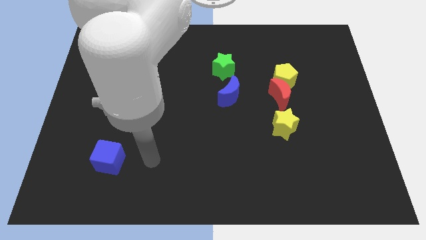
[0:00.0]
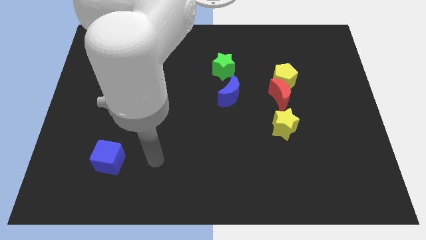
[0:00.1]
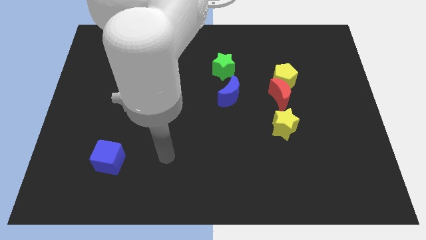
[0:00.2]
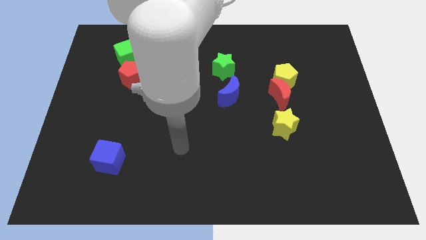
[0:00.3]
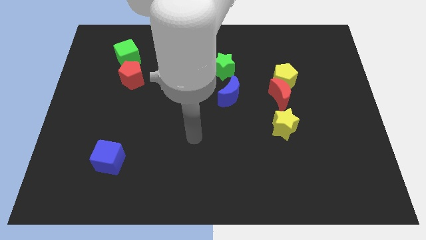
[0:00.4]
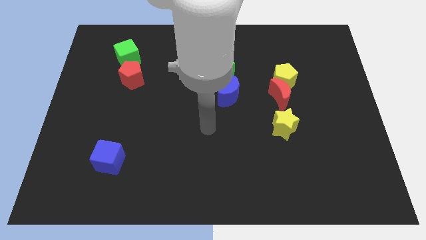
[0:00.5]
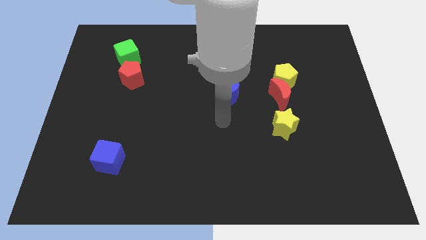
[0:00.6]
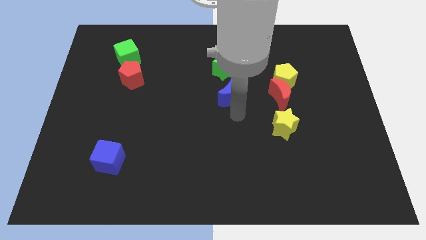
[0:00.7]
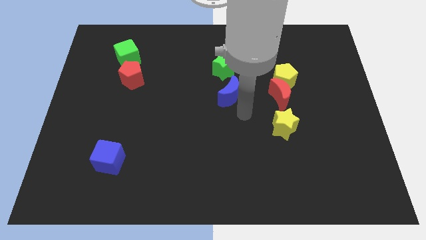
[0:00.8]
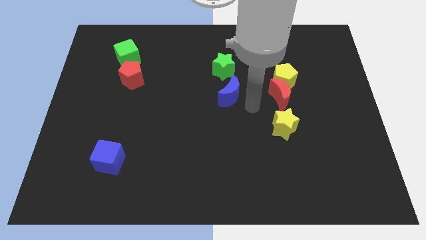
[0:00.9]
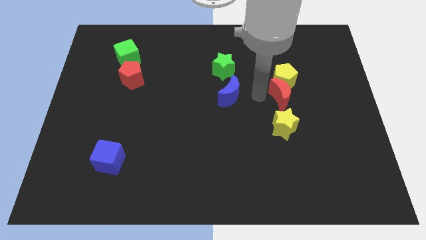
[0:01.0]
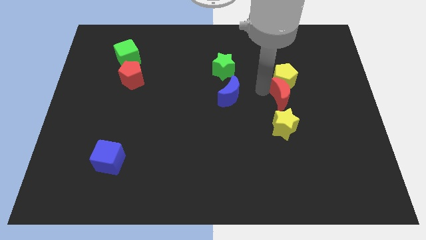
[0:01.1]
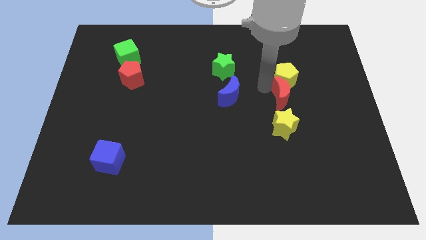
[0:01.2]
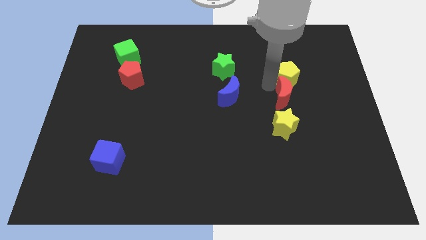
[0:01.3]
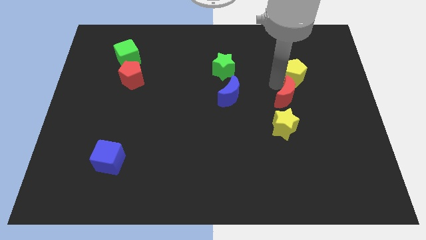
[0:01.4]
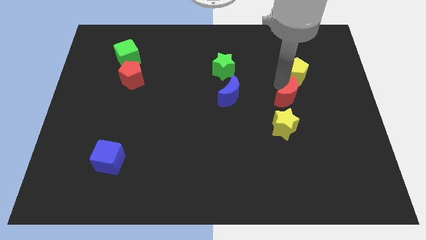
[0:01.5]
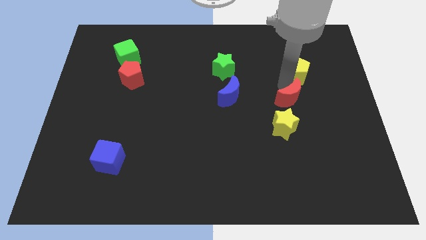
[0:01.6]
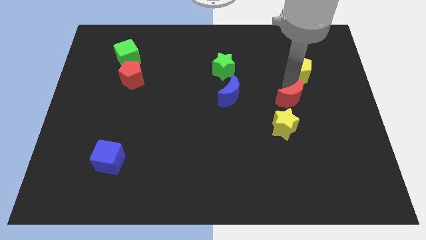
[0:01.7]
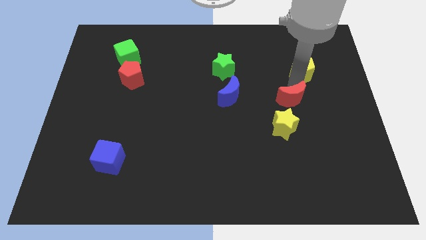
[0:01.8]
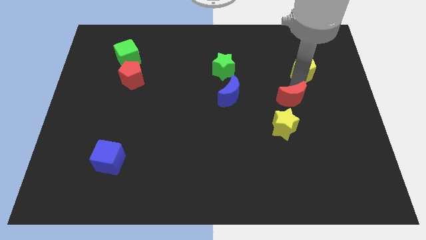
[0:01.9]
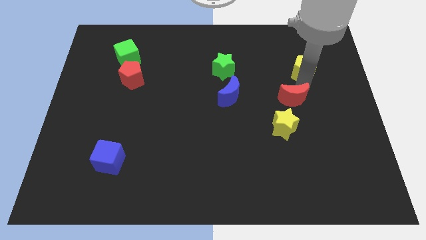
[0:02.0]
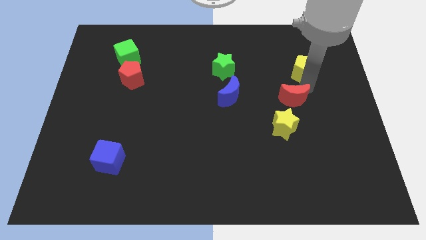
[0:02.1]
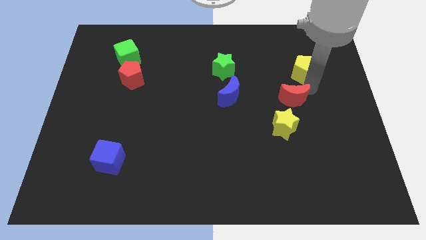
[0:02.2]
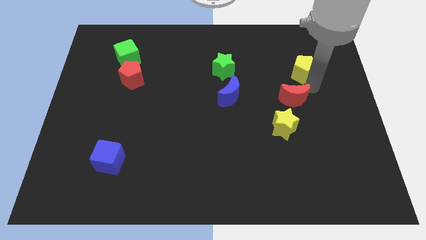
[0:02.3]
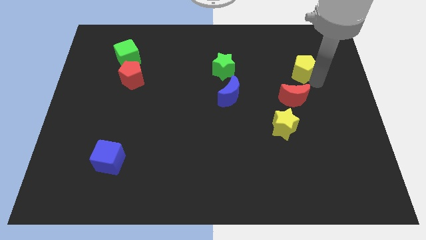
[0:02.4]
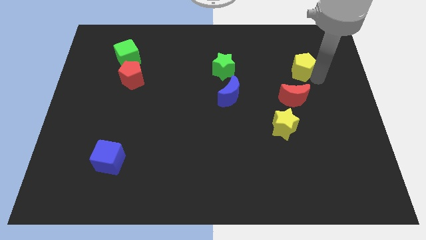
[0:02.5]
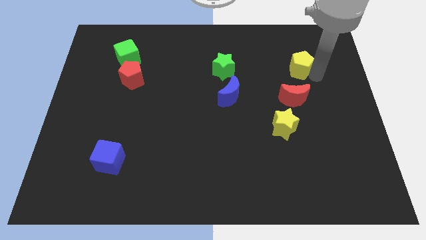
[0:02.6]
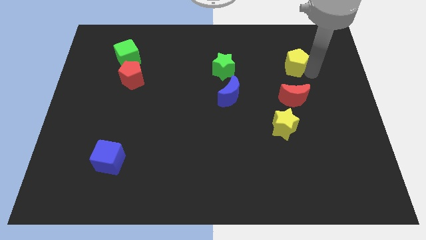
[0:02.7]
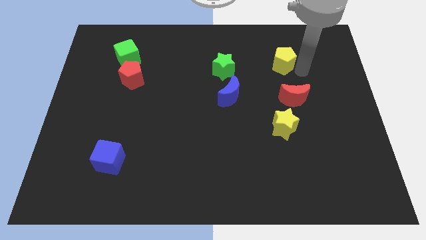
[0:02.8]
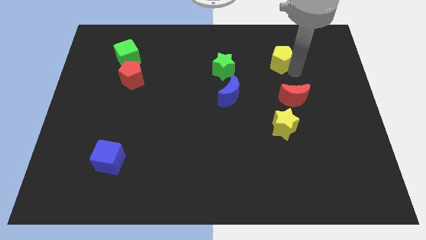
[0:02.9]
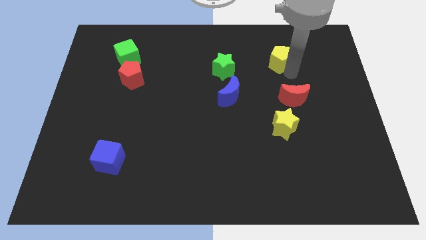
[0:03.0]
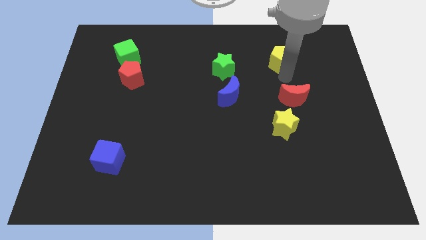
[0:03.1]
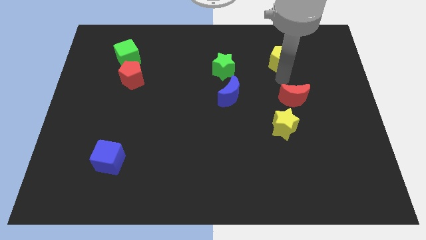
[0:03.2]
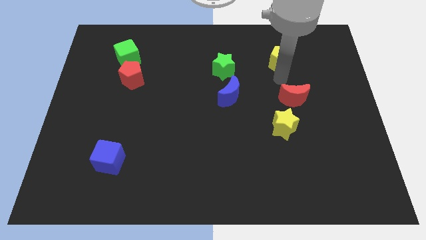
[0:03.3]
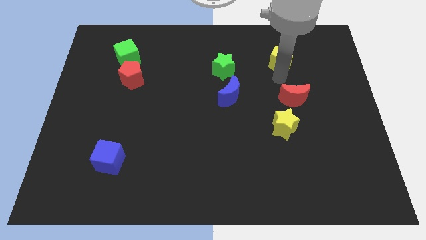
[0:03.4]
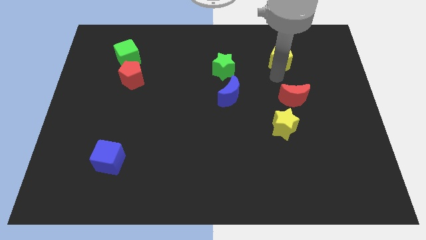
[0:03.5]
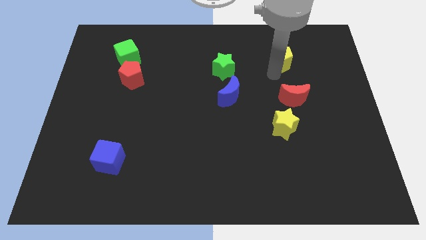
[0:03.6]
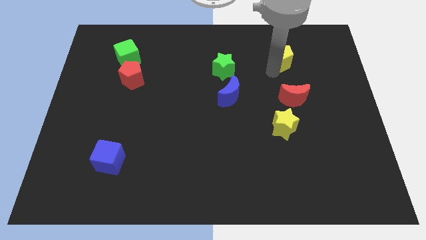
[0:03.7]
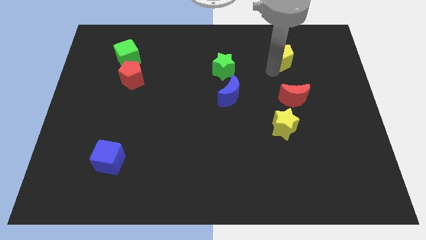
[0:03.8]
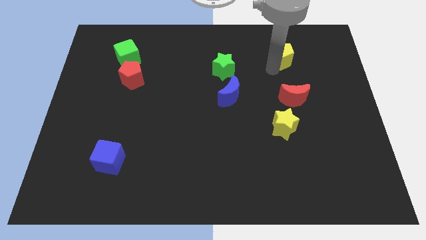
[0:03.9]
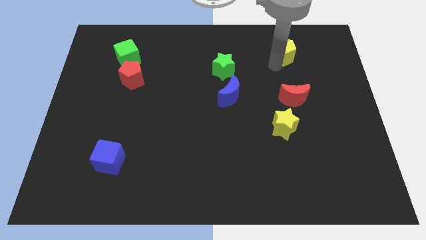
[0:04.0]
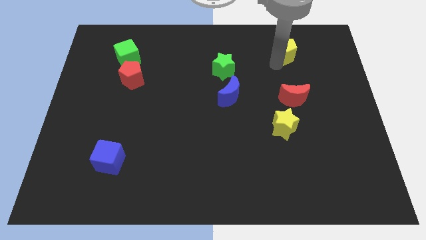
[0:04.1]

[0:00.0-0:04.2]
separate the yellow pentagon from the red crescent

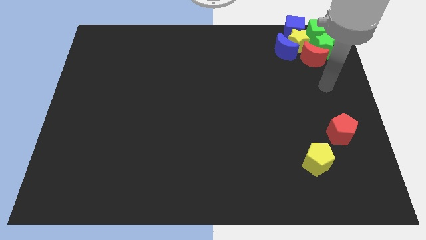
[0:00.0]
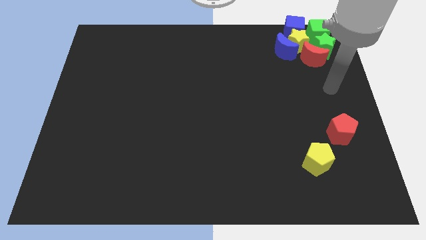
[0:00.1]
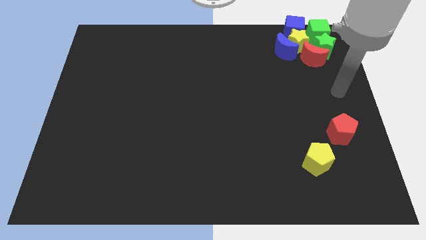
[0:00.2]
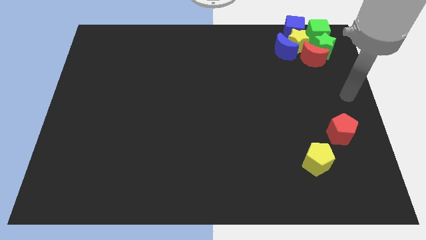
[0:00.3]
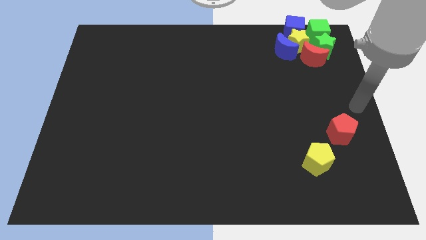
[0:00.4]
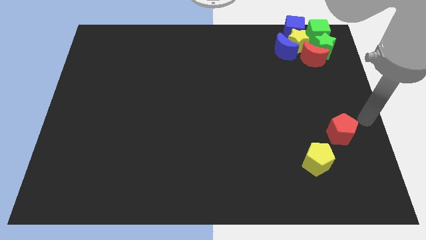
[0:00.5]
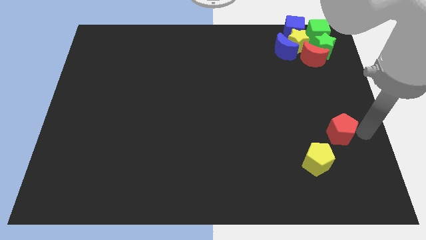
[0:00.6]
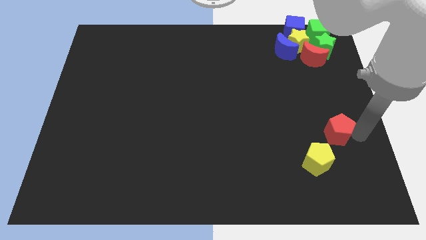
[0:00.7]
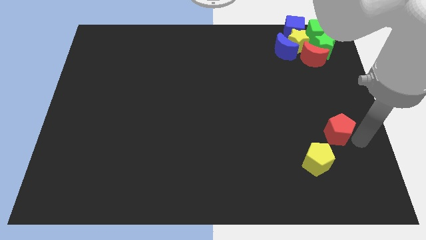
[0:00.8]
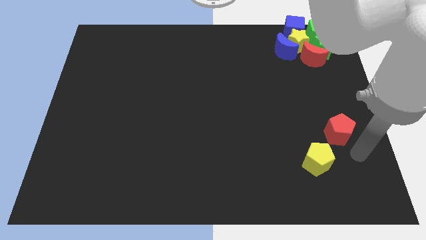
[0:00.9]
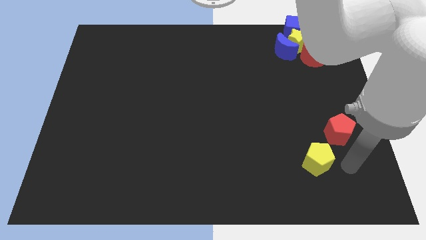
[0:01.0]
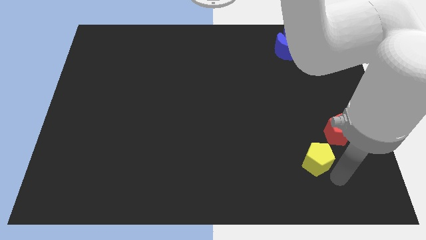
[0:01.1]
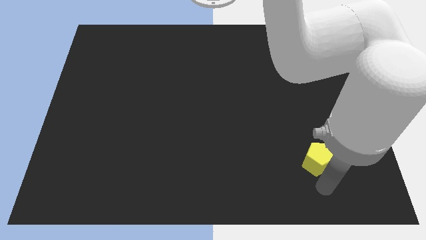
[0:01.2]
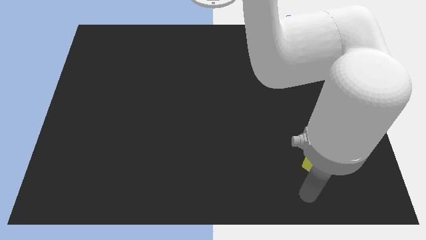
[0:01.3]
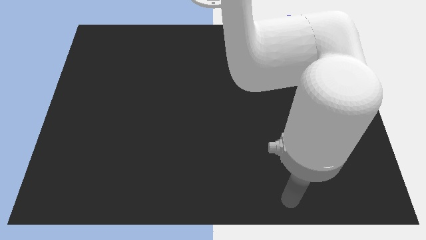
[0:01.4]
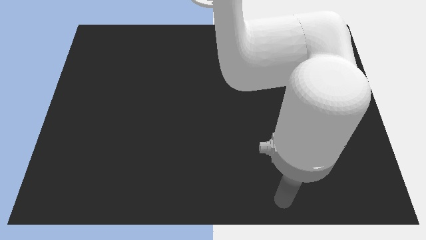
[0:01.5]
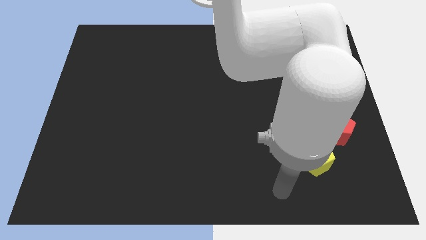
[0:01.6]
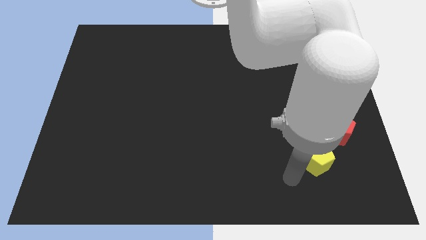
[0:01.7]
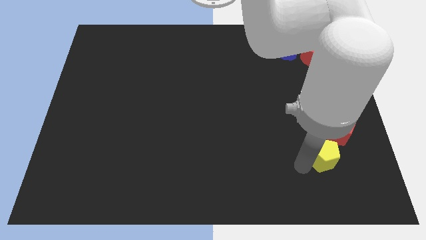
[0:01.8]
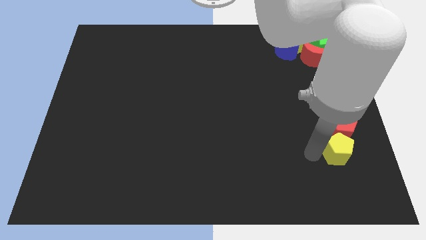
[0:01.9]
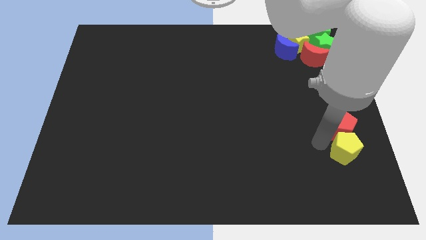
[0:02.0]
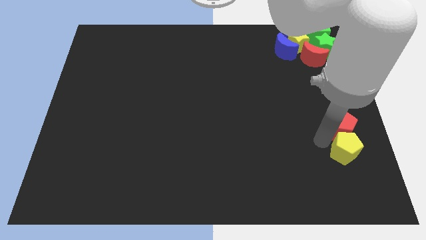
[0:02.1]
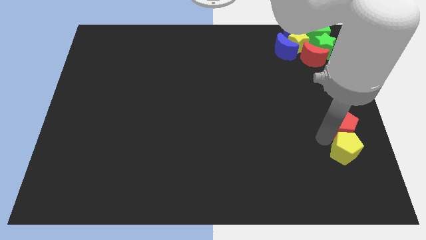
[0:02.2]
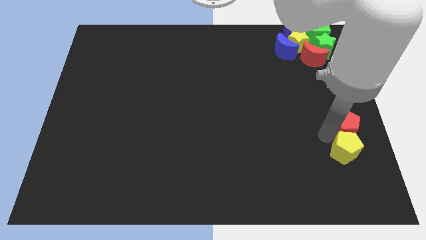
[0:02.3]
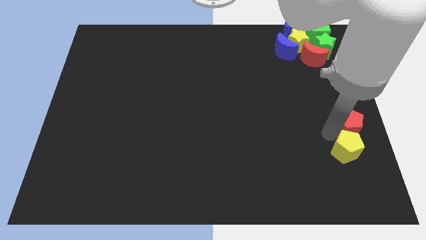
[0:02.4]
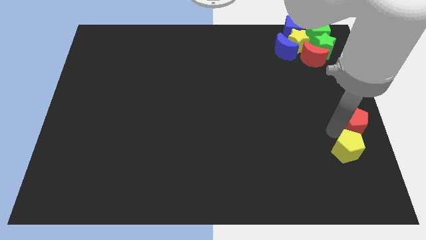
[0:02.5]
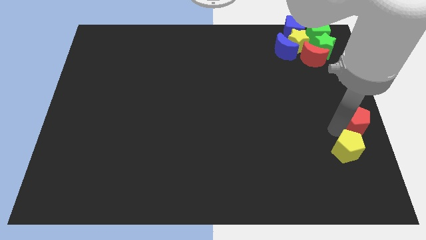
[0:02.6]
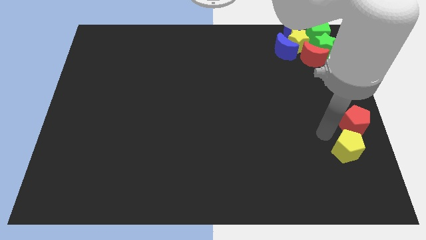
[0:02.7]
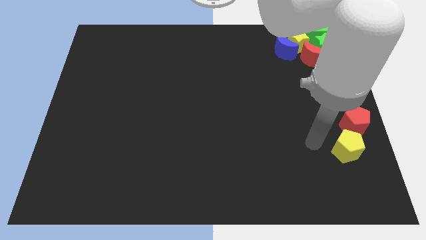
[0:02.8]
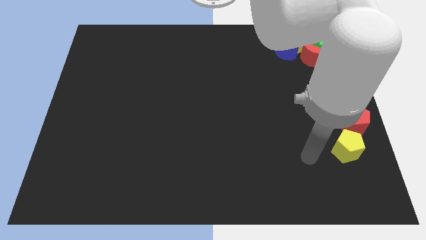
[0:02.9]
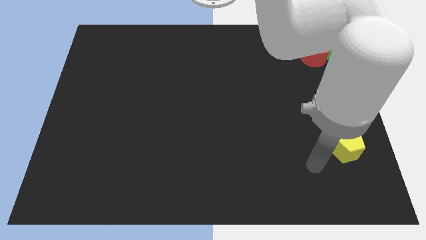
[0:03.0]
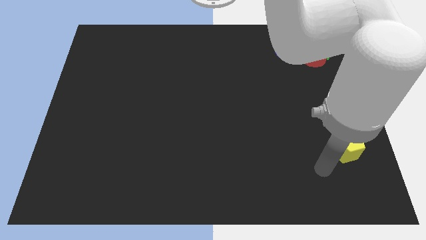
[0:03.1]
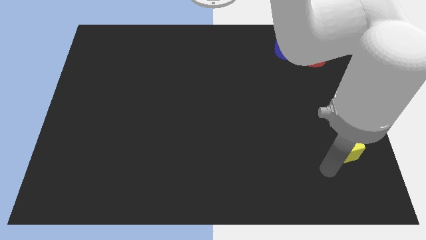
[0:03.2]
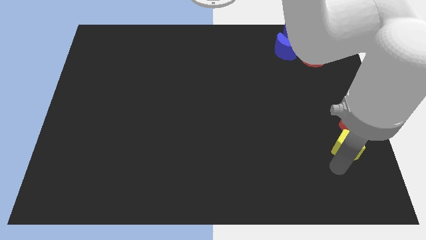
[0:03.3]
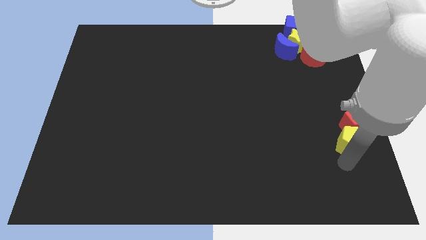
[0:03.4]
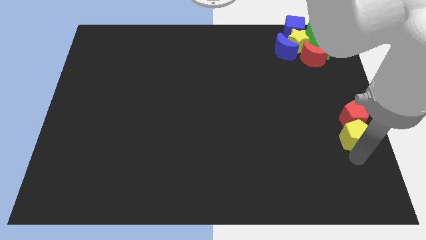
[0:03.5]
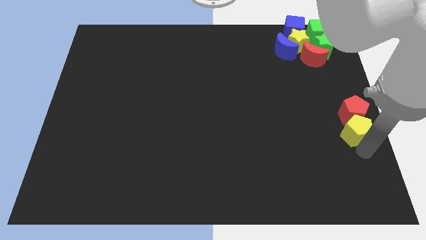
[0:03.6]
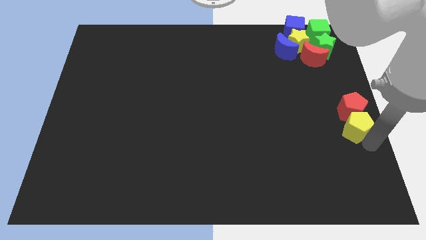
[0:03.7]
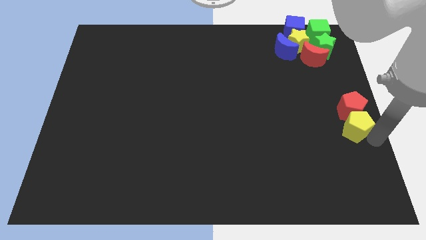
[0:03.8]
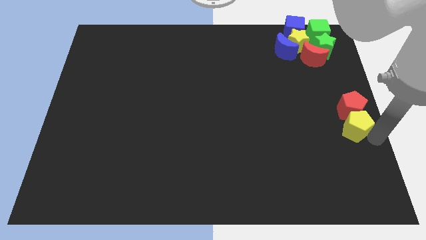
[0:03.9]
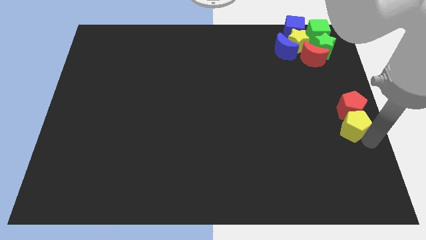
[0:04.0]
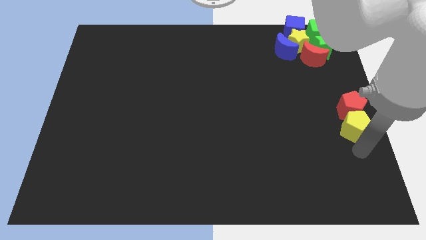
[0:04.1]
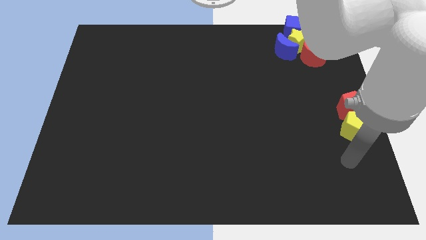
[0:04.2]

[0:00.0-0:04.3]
push both pentagons to the center right

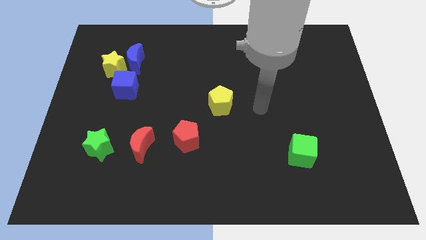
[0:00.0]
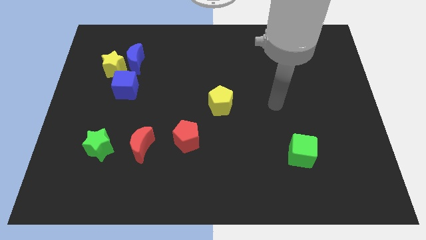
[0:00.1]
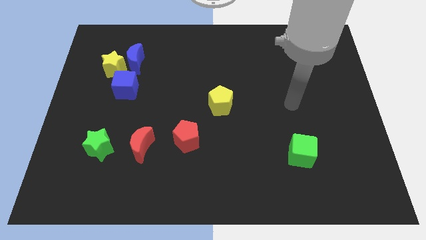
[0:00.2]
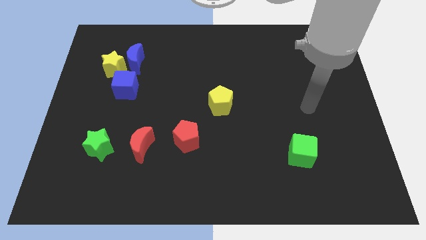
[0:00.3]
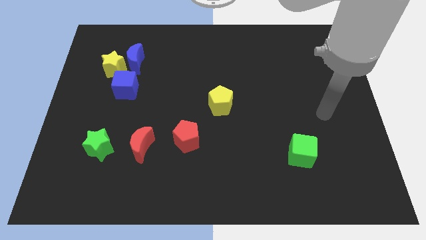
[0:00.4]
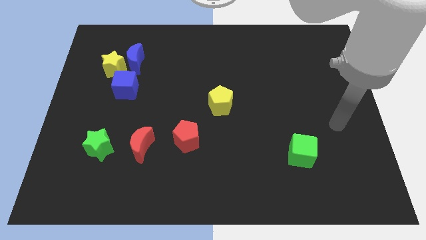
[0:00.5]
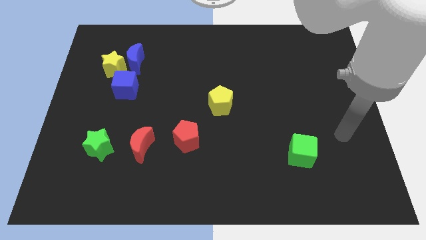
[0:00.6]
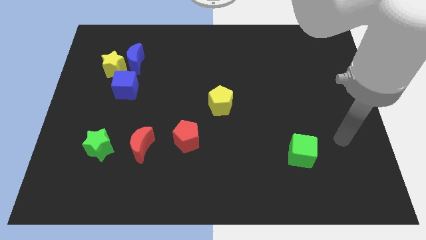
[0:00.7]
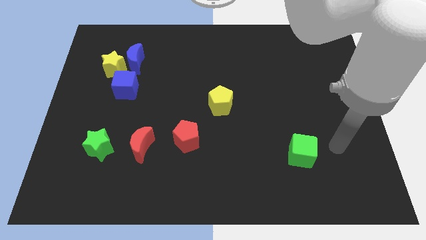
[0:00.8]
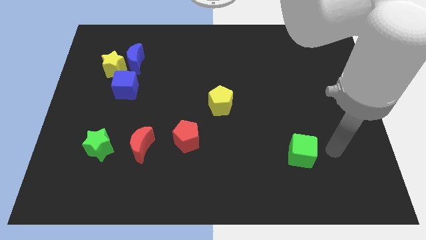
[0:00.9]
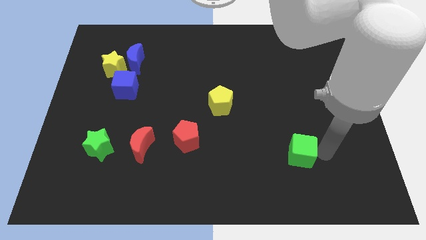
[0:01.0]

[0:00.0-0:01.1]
move your arm towards the green cube
